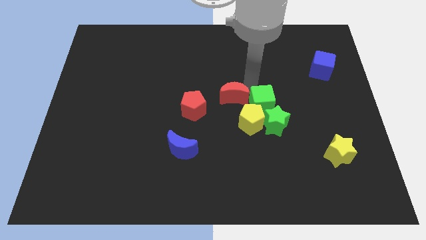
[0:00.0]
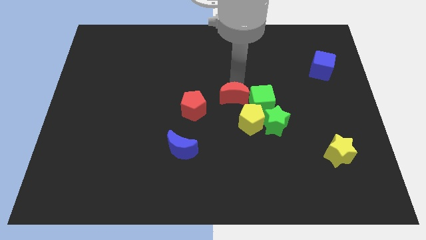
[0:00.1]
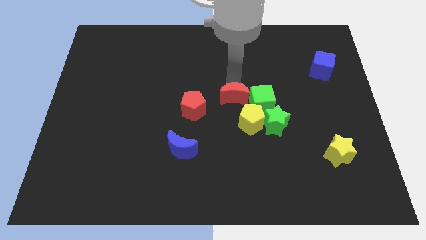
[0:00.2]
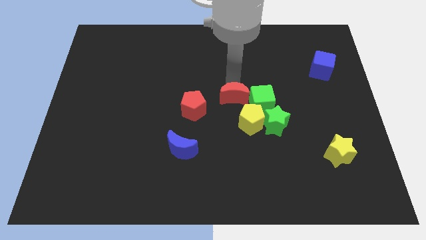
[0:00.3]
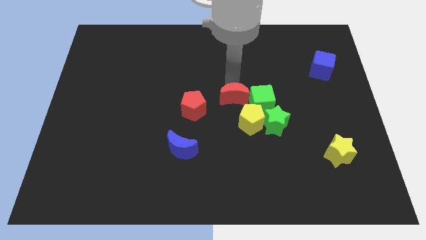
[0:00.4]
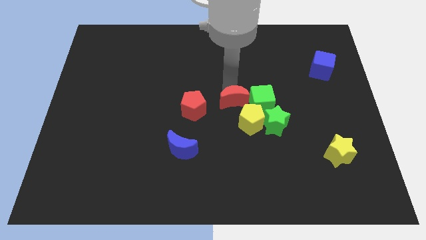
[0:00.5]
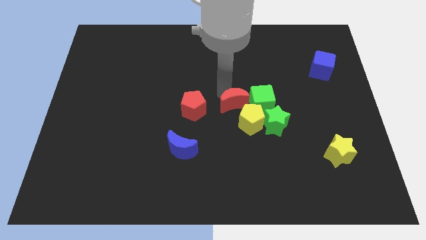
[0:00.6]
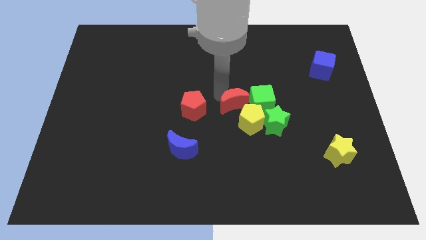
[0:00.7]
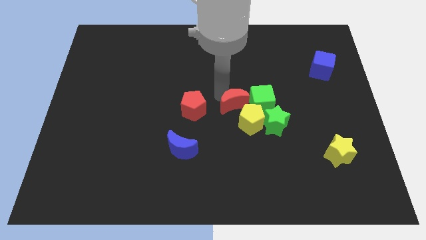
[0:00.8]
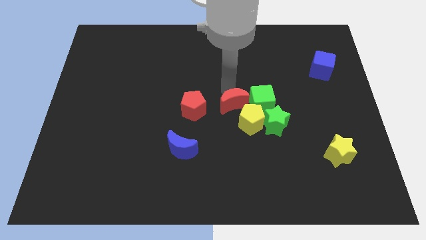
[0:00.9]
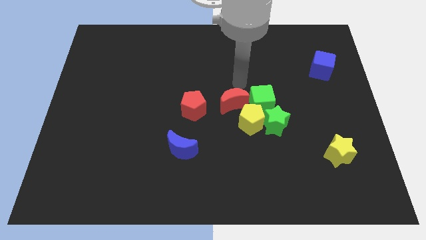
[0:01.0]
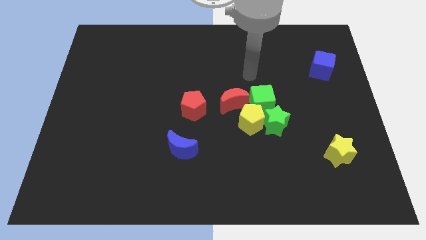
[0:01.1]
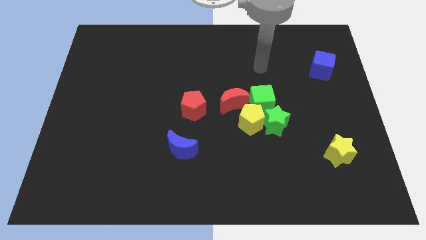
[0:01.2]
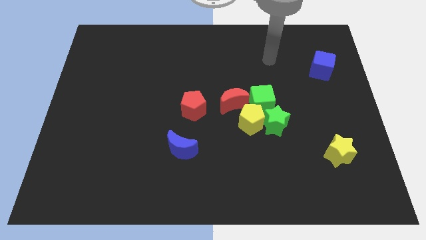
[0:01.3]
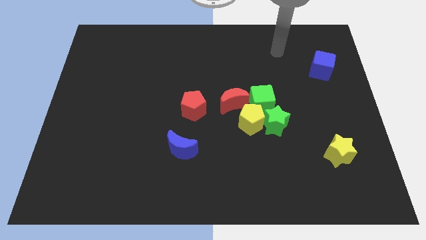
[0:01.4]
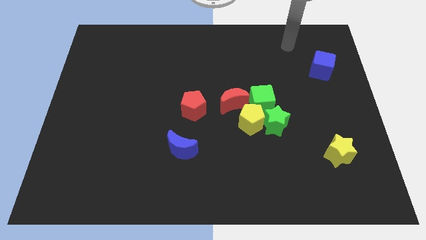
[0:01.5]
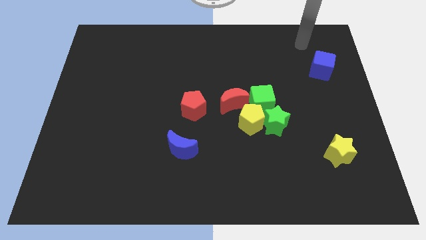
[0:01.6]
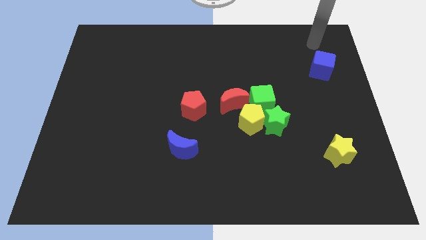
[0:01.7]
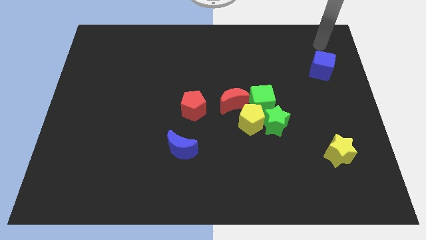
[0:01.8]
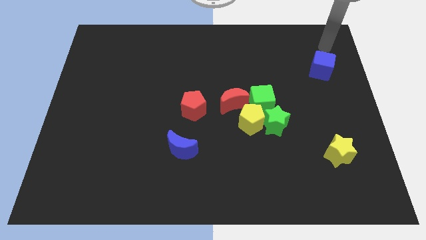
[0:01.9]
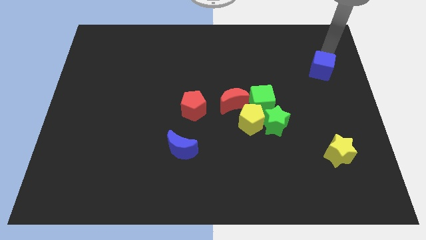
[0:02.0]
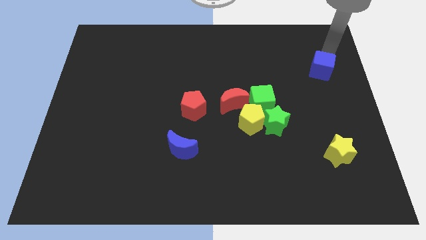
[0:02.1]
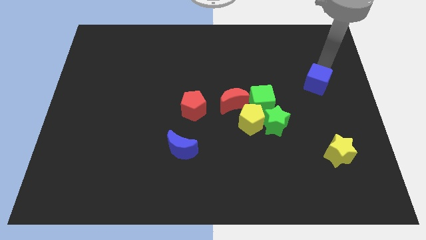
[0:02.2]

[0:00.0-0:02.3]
place the red moon in between the red blocks

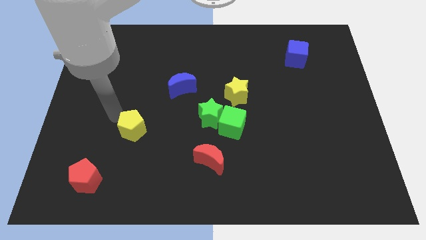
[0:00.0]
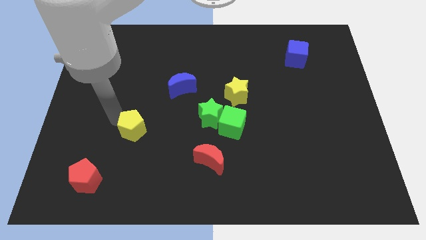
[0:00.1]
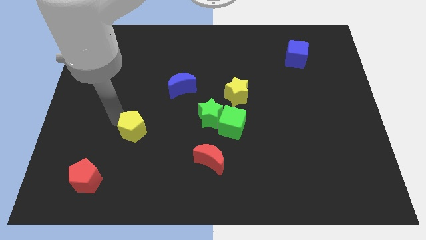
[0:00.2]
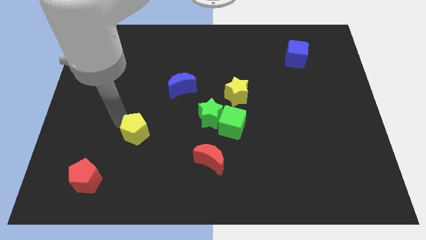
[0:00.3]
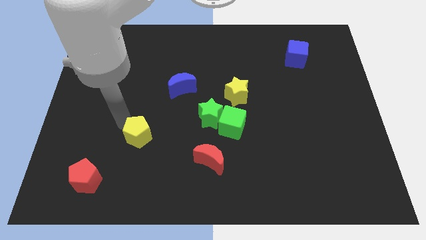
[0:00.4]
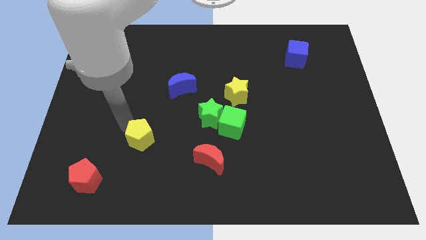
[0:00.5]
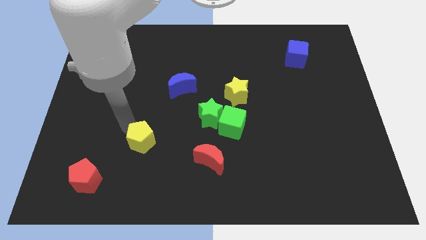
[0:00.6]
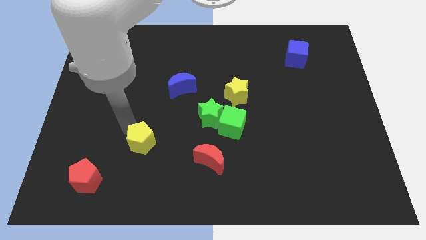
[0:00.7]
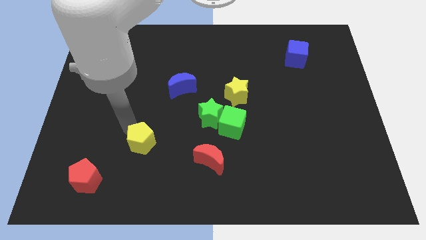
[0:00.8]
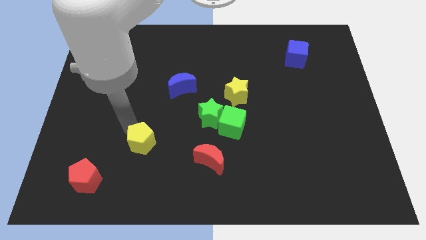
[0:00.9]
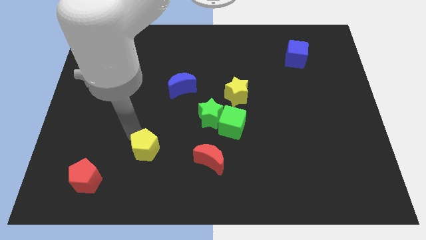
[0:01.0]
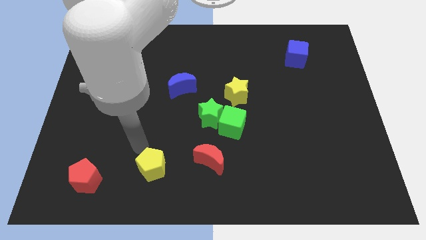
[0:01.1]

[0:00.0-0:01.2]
place the yellow pentagon between red moon and red pentagon

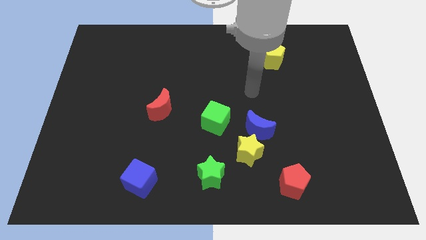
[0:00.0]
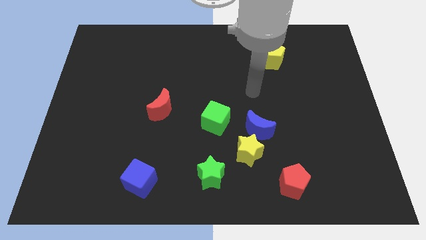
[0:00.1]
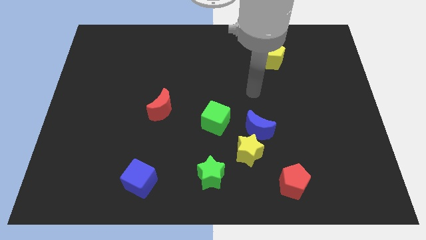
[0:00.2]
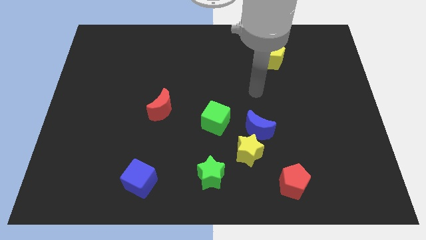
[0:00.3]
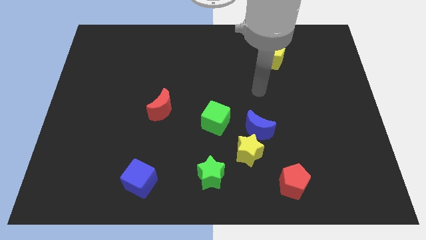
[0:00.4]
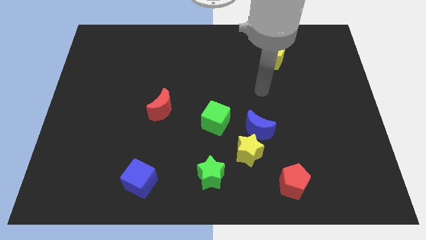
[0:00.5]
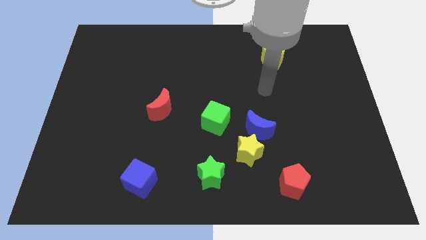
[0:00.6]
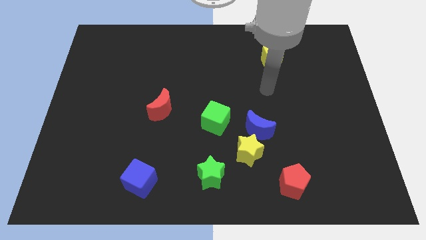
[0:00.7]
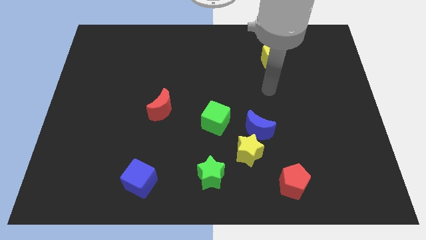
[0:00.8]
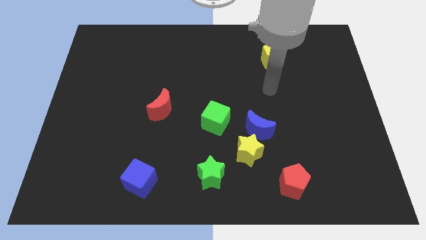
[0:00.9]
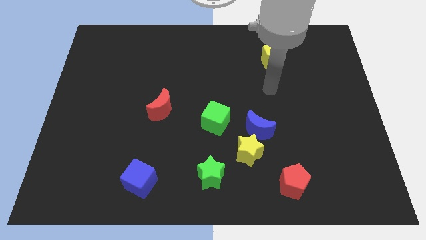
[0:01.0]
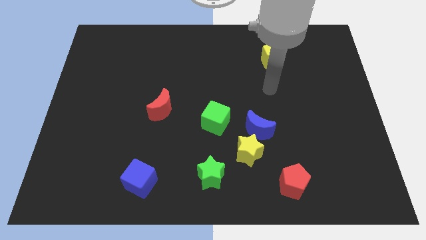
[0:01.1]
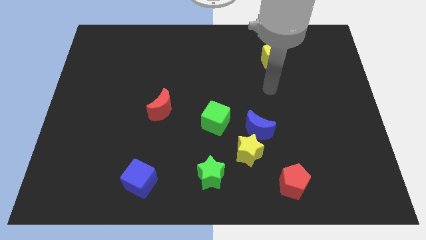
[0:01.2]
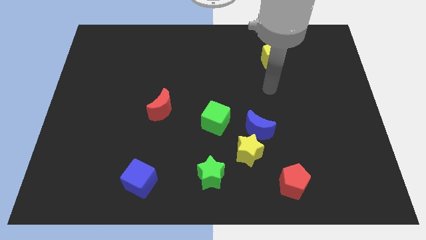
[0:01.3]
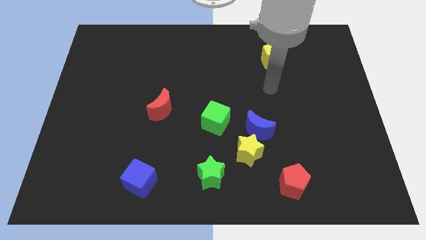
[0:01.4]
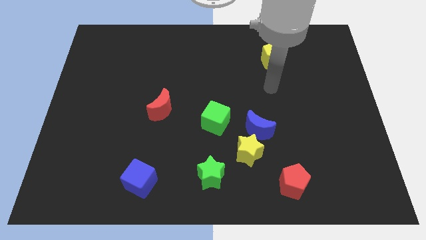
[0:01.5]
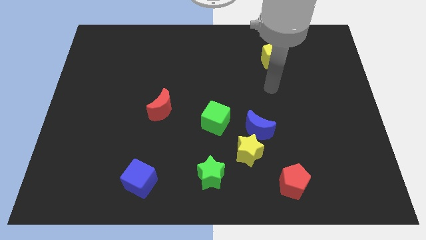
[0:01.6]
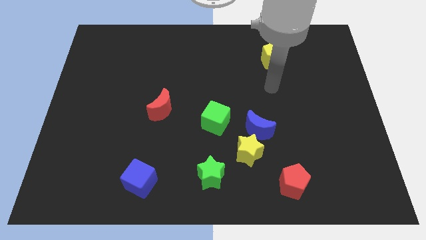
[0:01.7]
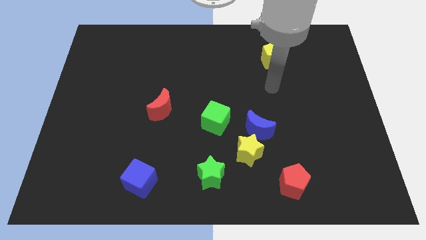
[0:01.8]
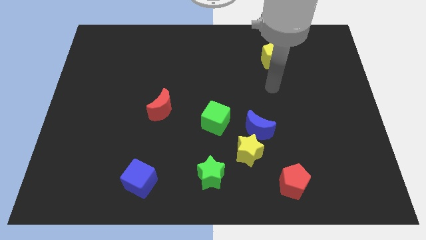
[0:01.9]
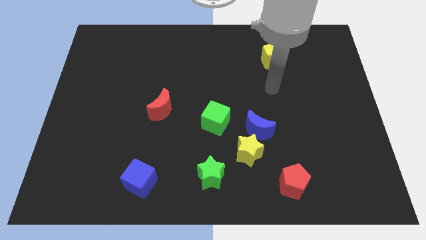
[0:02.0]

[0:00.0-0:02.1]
place your arm below the yellow pentagon

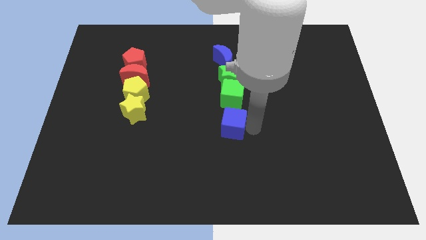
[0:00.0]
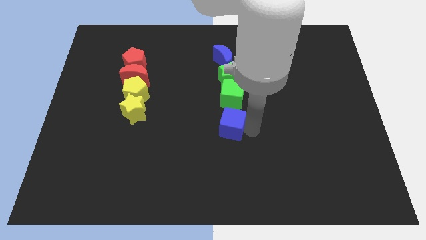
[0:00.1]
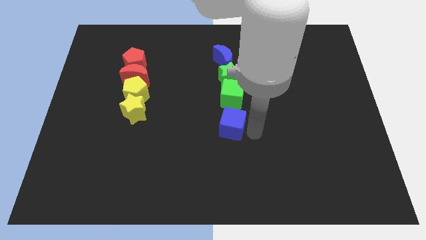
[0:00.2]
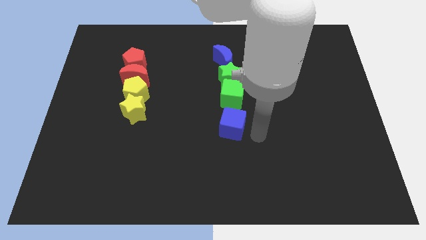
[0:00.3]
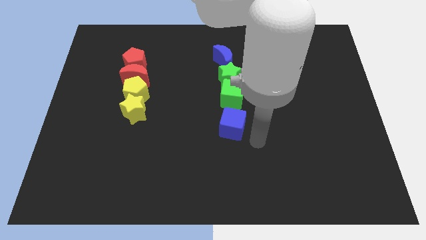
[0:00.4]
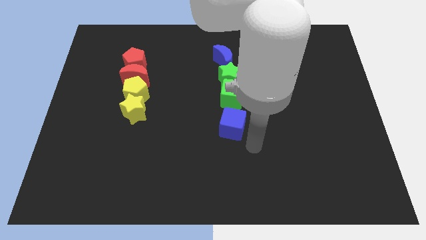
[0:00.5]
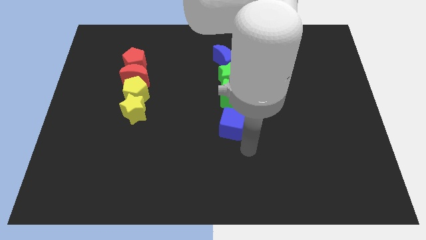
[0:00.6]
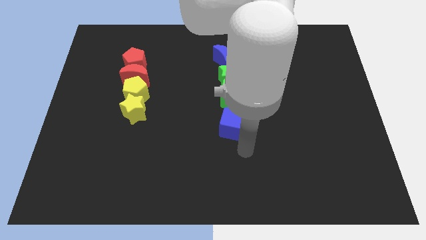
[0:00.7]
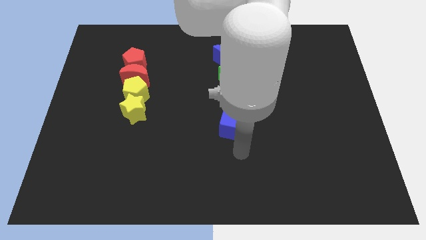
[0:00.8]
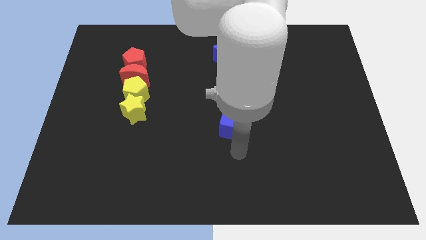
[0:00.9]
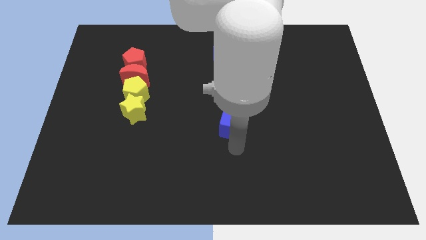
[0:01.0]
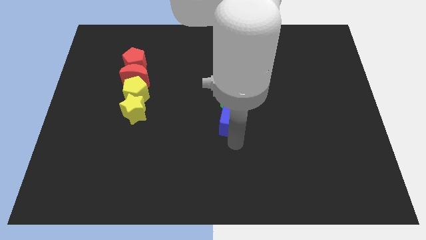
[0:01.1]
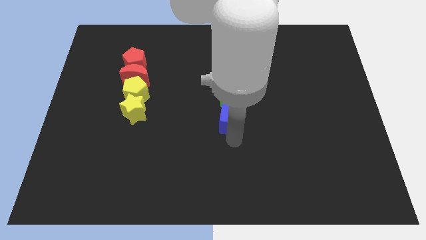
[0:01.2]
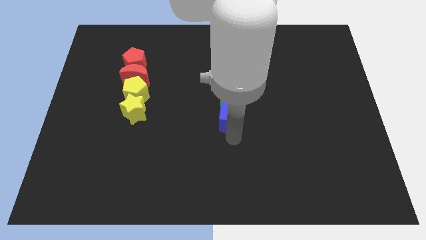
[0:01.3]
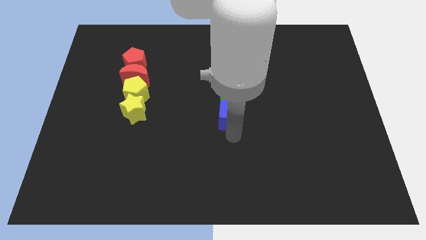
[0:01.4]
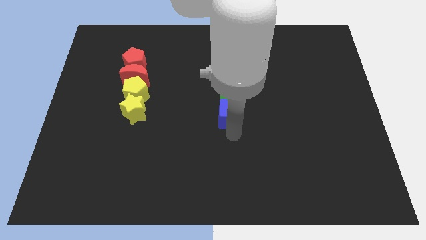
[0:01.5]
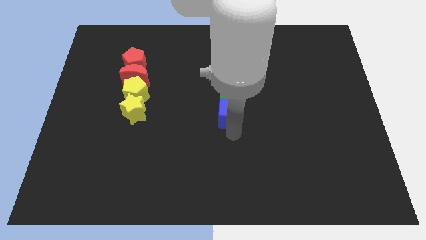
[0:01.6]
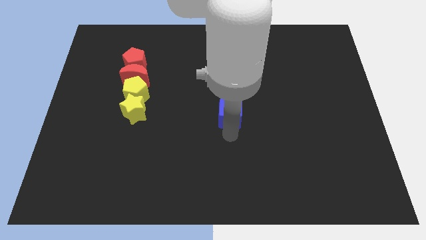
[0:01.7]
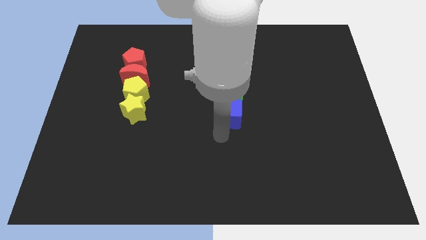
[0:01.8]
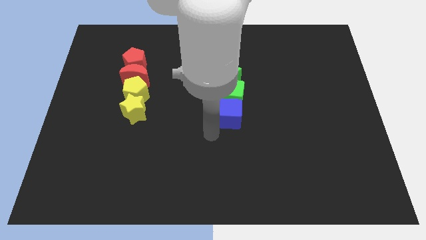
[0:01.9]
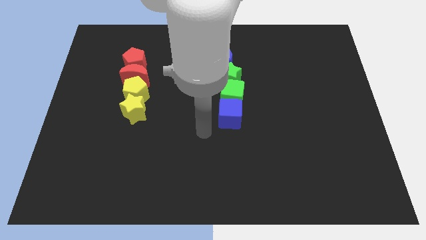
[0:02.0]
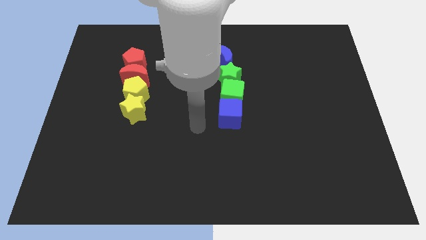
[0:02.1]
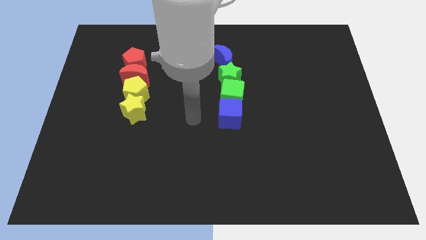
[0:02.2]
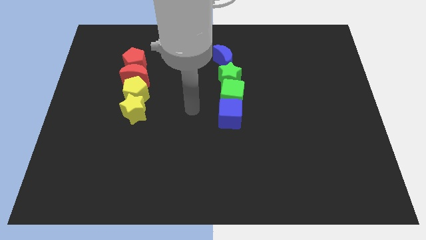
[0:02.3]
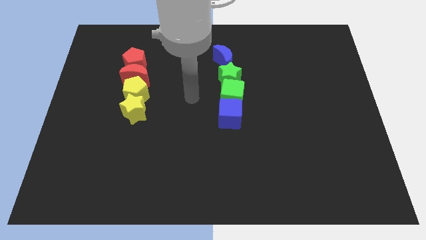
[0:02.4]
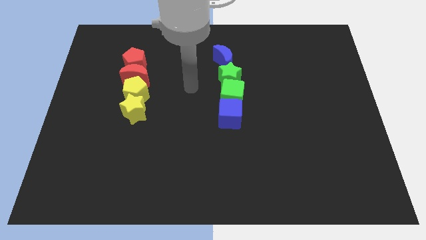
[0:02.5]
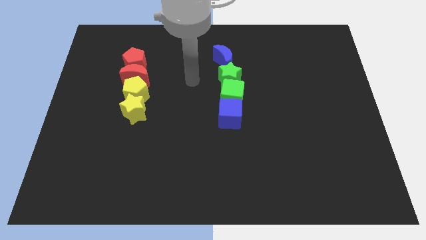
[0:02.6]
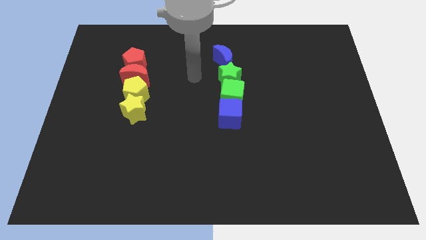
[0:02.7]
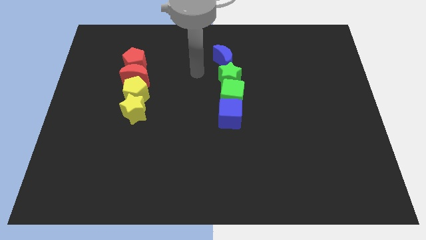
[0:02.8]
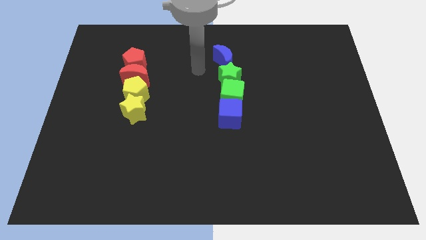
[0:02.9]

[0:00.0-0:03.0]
push the blue cube close to the green cube

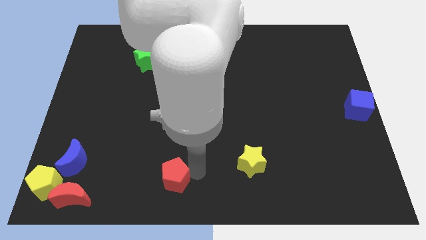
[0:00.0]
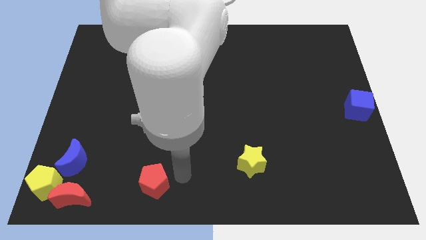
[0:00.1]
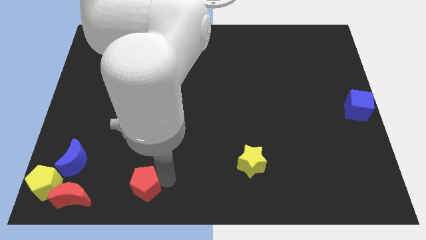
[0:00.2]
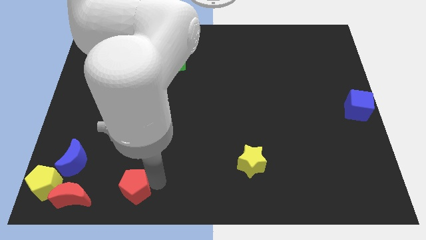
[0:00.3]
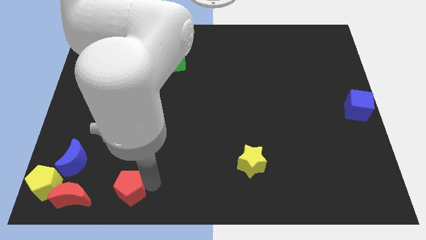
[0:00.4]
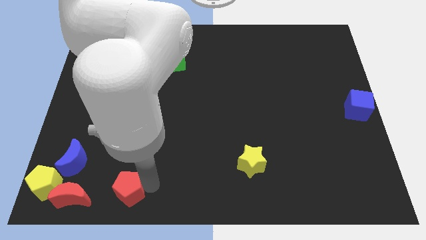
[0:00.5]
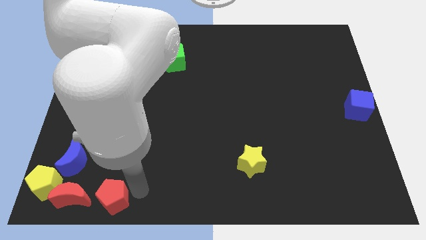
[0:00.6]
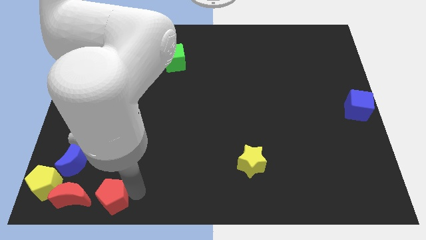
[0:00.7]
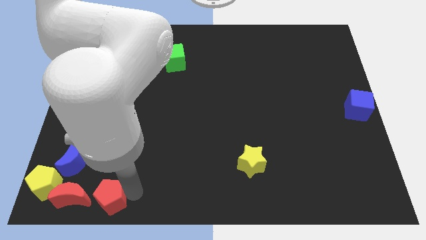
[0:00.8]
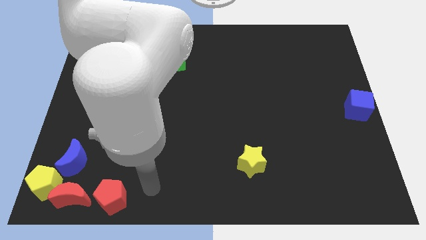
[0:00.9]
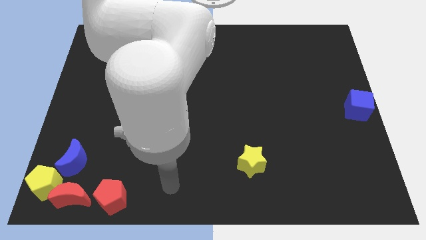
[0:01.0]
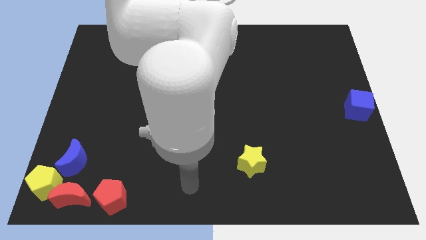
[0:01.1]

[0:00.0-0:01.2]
put the red pentagon on the right side of the red crescent
